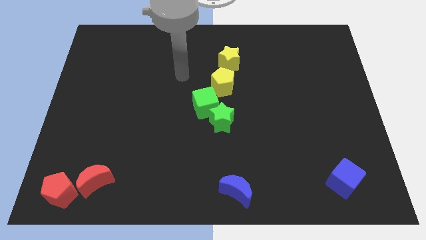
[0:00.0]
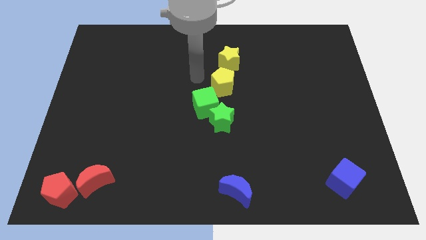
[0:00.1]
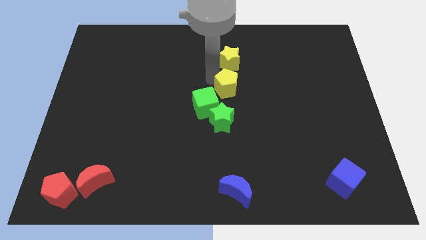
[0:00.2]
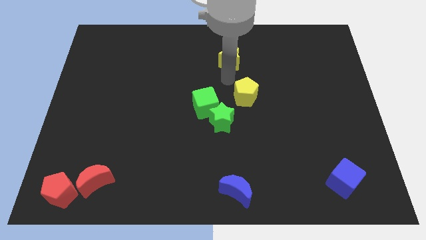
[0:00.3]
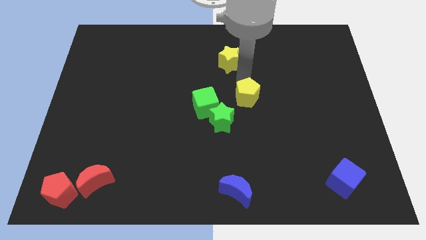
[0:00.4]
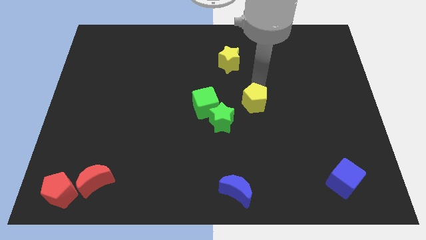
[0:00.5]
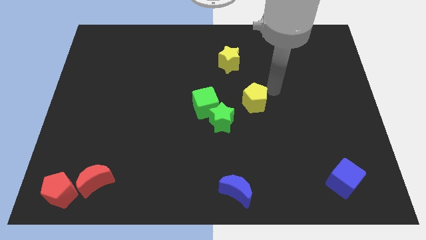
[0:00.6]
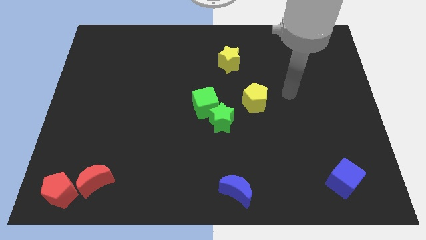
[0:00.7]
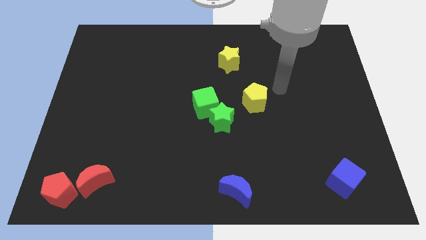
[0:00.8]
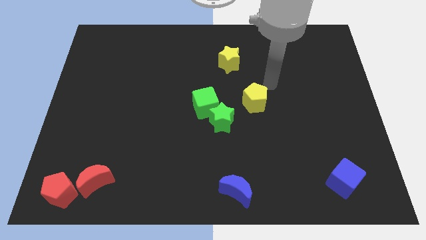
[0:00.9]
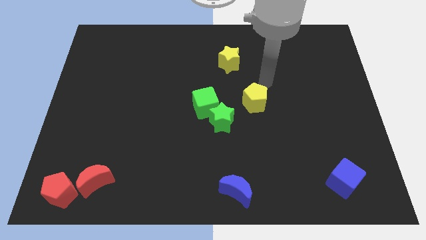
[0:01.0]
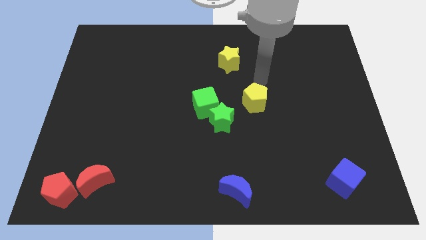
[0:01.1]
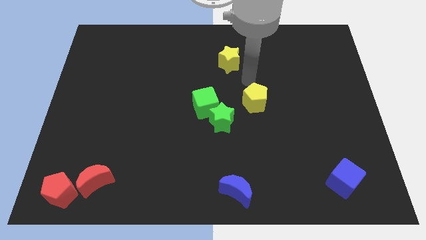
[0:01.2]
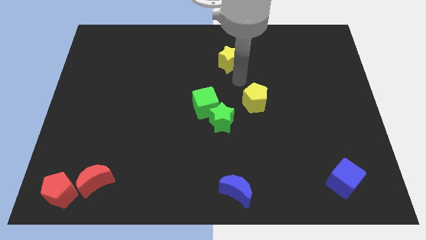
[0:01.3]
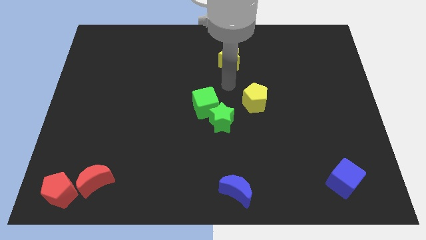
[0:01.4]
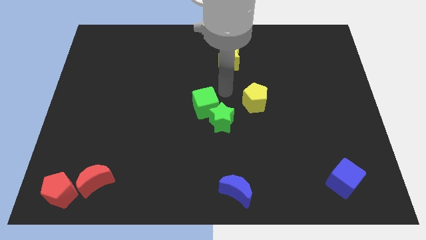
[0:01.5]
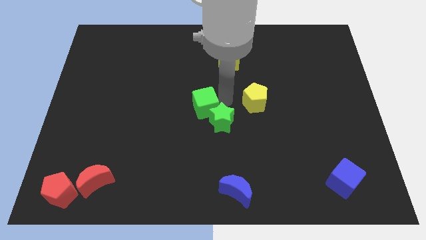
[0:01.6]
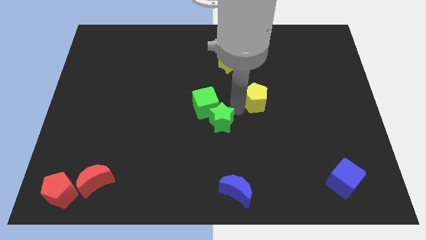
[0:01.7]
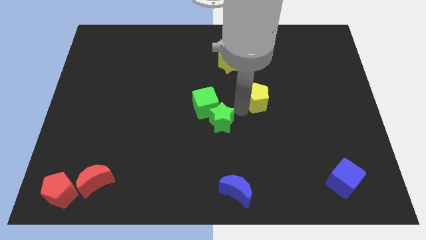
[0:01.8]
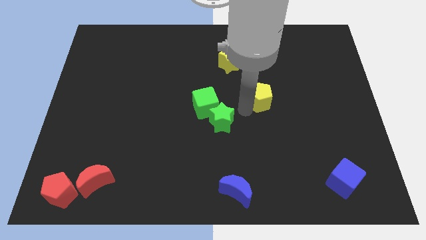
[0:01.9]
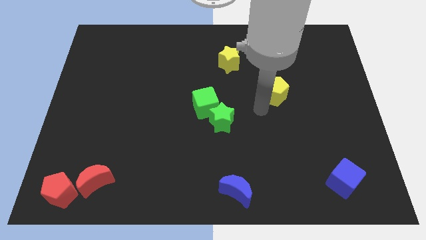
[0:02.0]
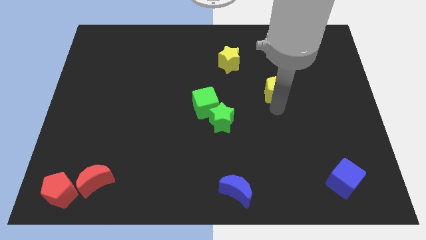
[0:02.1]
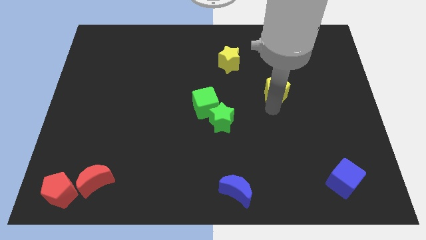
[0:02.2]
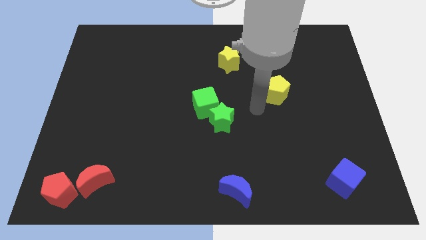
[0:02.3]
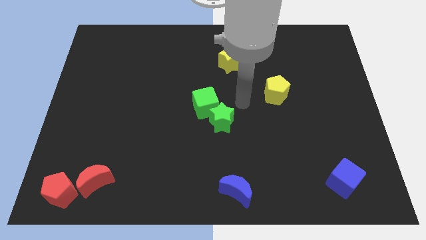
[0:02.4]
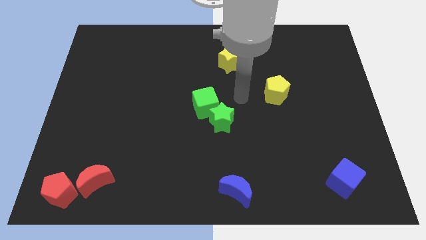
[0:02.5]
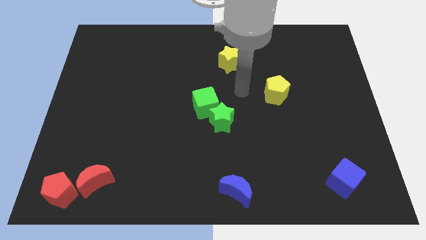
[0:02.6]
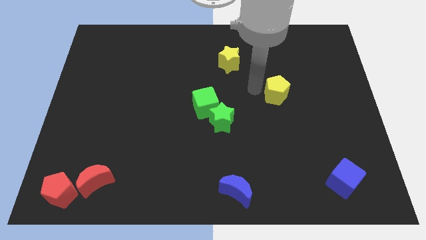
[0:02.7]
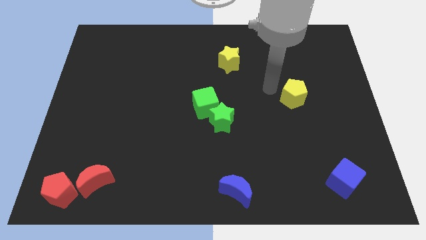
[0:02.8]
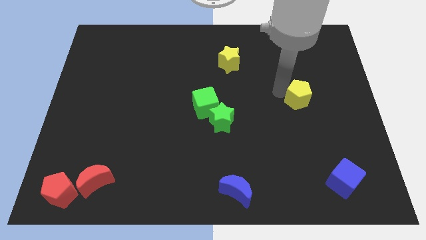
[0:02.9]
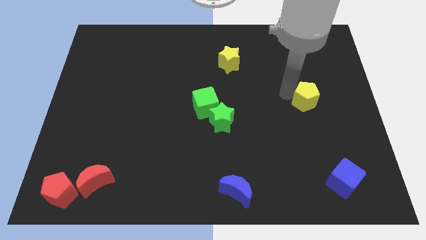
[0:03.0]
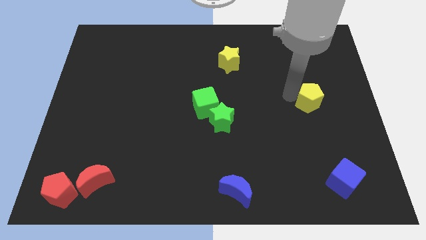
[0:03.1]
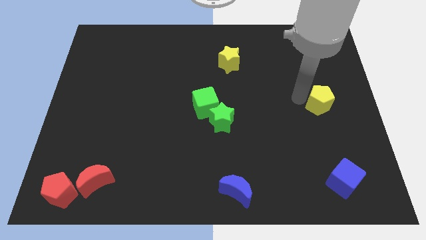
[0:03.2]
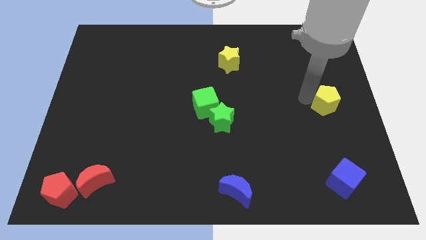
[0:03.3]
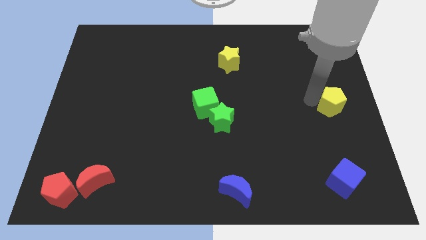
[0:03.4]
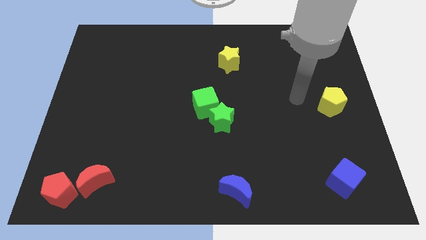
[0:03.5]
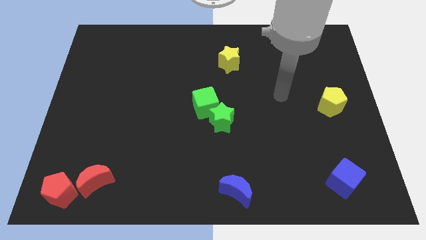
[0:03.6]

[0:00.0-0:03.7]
push the yellow pentagon vertically at the top side of the blue cube

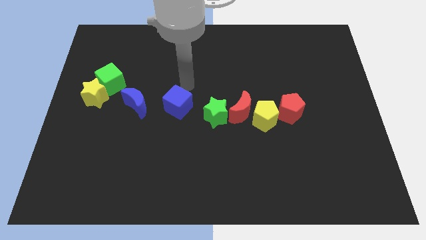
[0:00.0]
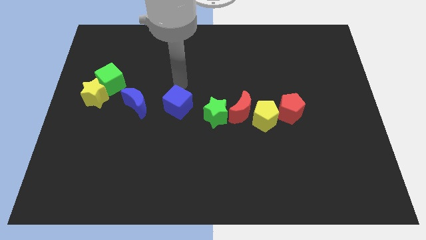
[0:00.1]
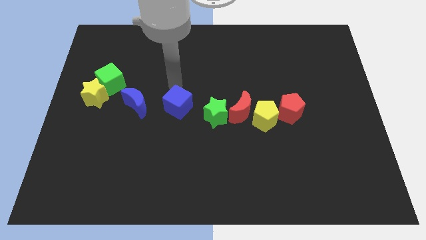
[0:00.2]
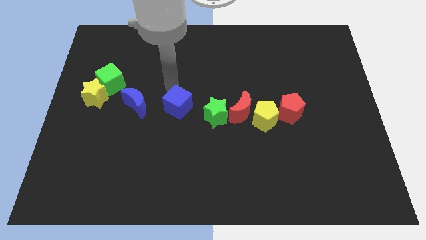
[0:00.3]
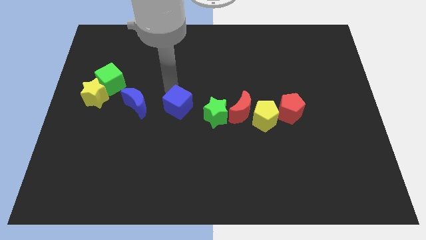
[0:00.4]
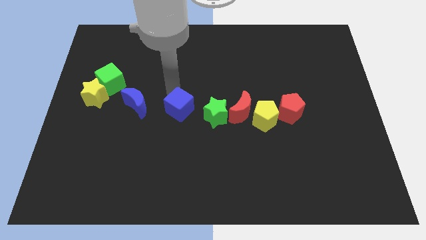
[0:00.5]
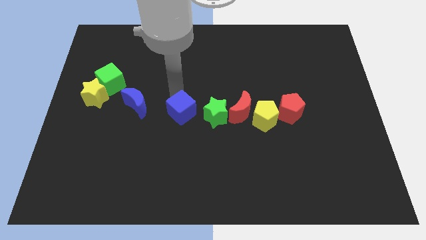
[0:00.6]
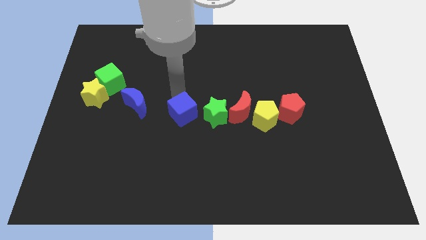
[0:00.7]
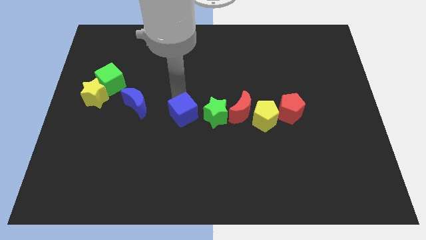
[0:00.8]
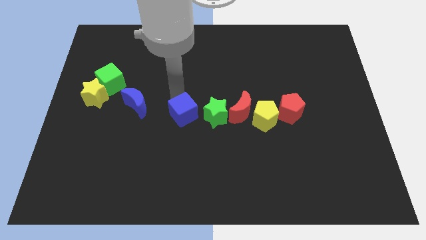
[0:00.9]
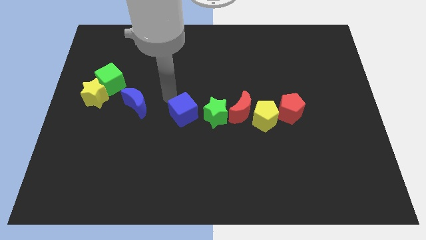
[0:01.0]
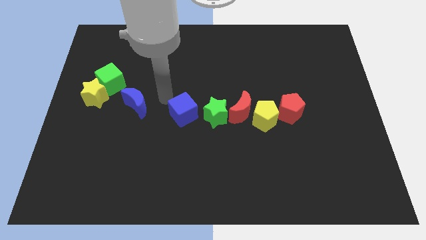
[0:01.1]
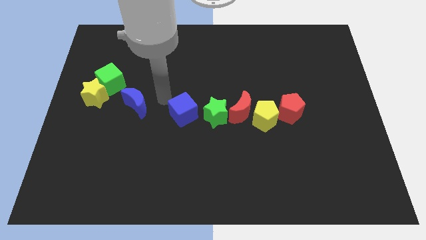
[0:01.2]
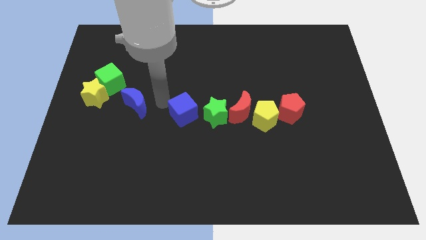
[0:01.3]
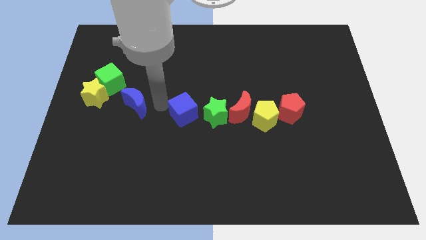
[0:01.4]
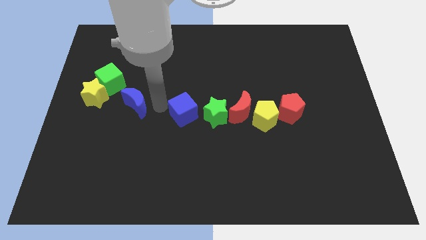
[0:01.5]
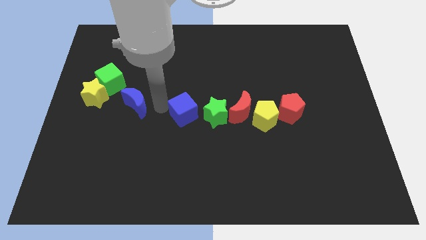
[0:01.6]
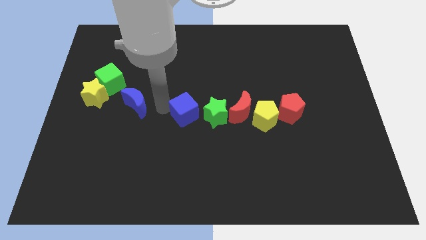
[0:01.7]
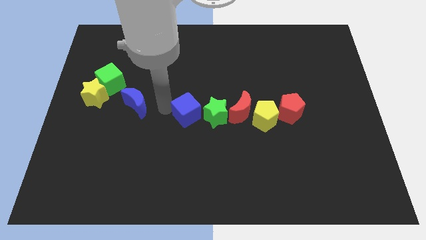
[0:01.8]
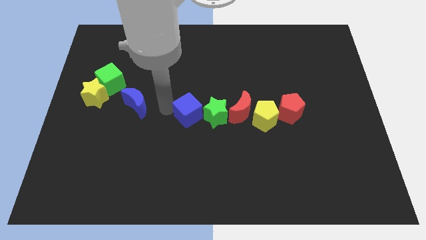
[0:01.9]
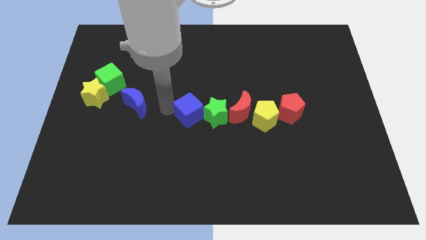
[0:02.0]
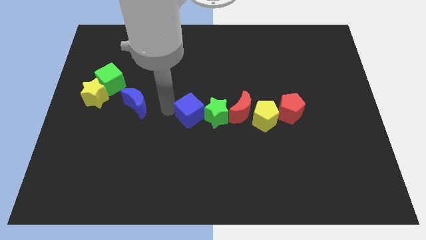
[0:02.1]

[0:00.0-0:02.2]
place the blue cube left of green star

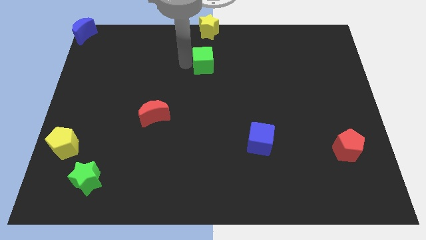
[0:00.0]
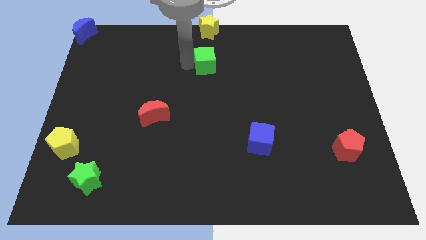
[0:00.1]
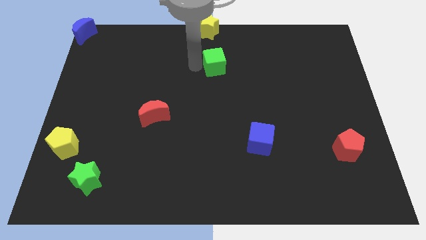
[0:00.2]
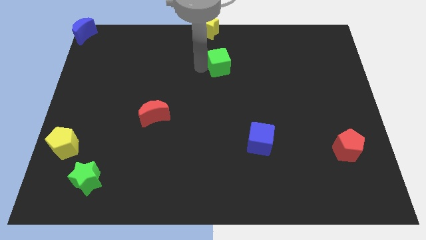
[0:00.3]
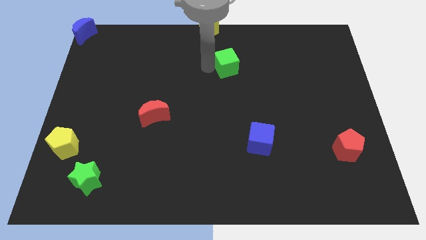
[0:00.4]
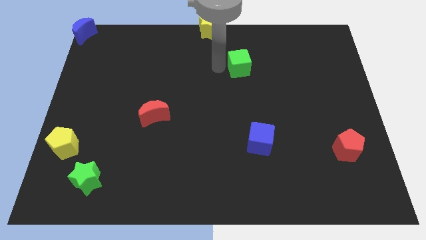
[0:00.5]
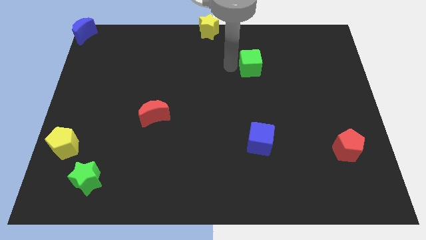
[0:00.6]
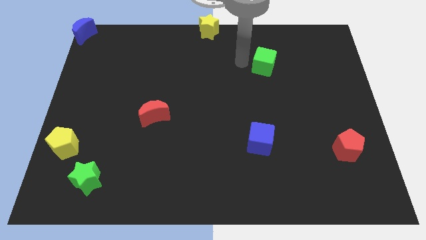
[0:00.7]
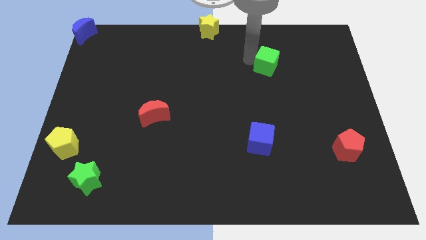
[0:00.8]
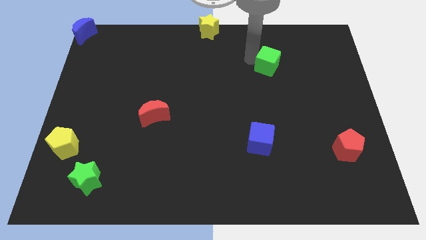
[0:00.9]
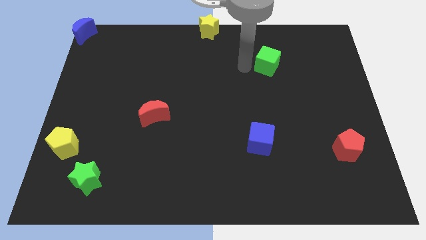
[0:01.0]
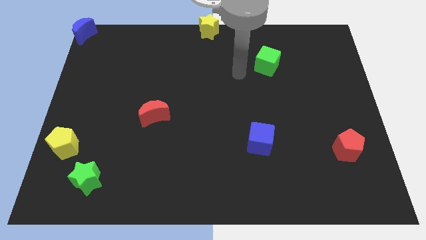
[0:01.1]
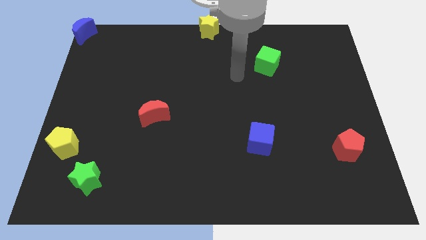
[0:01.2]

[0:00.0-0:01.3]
move the green cube to the bottom right of the yellow star

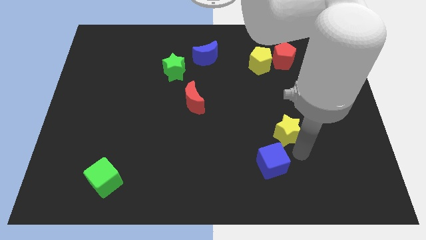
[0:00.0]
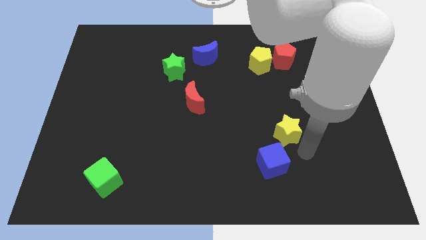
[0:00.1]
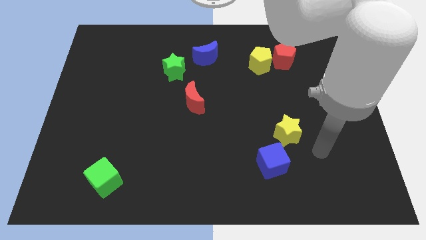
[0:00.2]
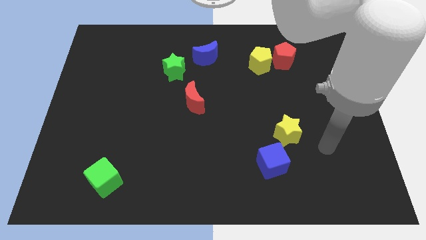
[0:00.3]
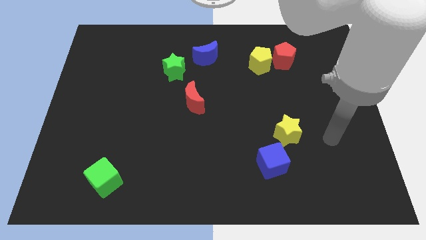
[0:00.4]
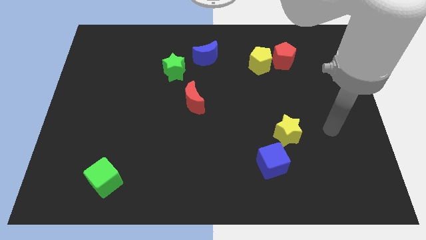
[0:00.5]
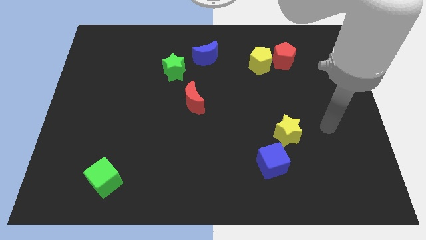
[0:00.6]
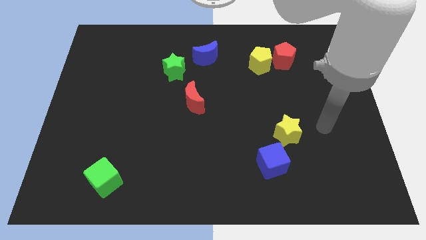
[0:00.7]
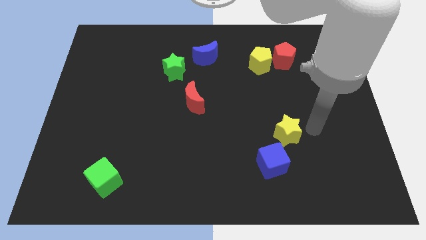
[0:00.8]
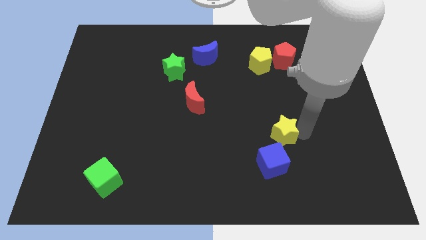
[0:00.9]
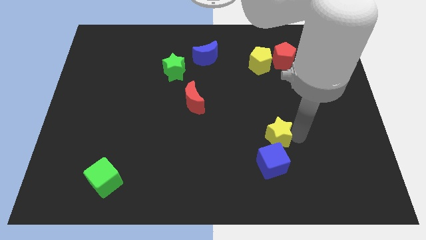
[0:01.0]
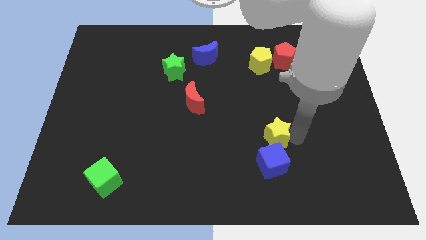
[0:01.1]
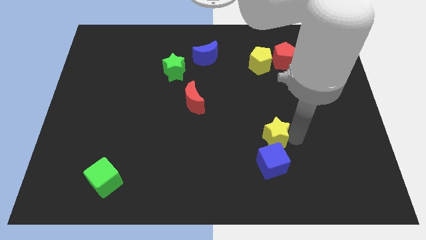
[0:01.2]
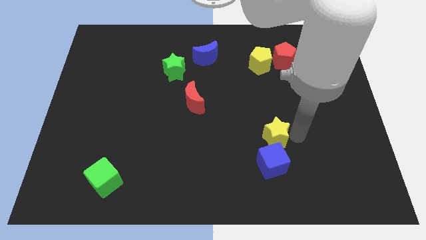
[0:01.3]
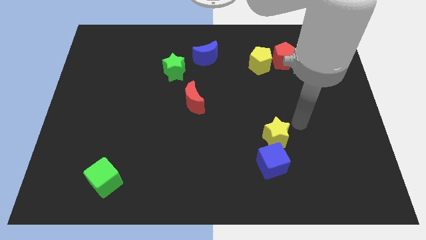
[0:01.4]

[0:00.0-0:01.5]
move the yellow star to the top of the blue cube

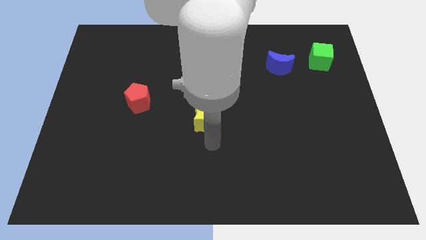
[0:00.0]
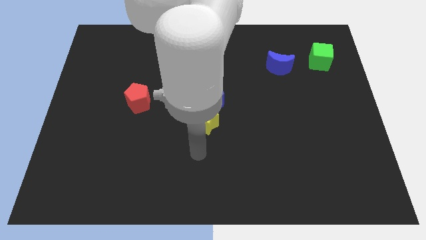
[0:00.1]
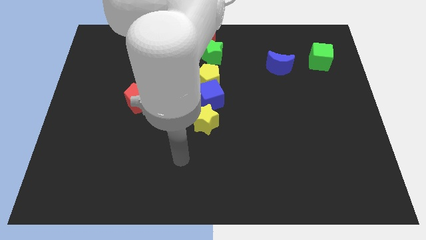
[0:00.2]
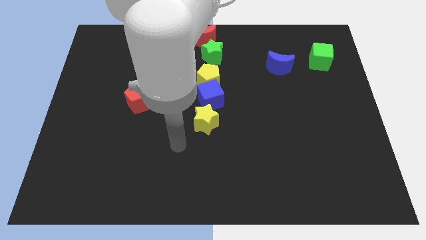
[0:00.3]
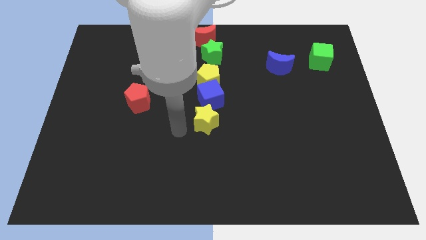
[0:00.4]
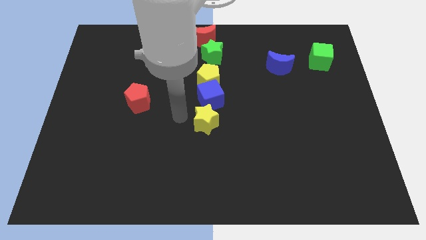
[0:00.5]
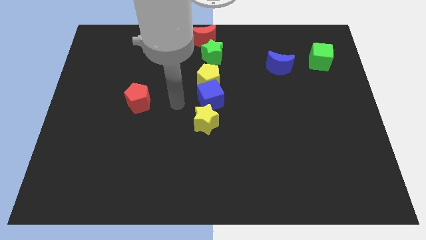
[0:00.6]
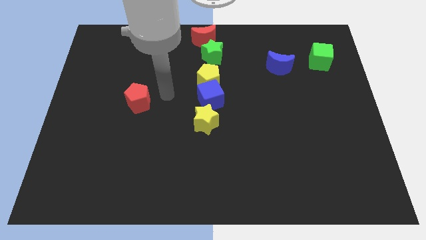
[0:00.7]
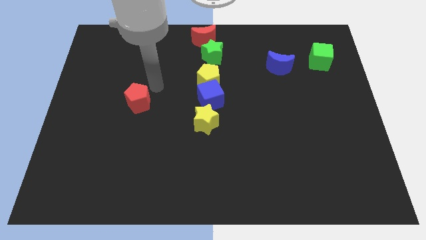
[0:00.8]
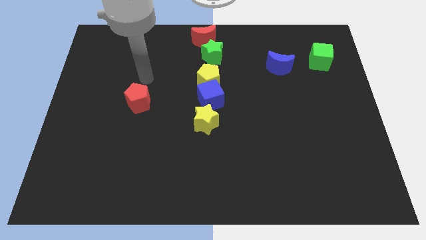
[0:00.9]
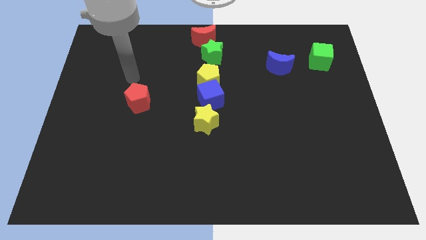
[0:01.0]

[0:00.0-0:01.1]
move the arm away from the yellow star
